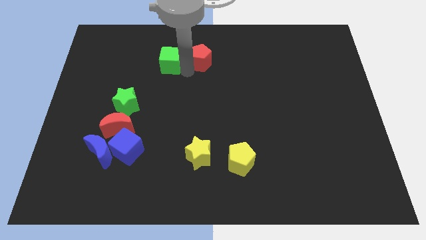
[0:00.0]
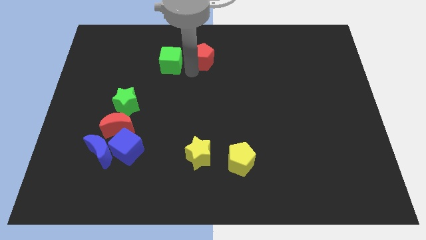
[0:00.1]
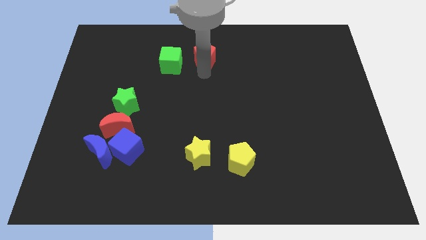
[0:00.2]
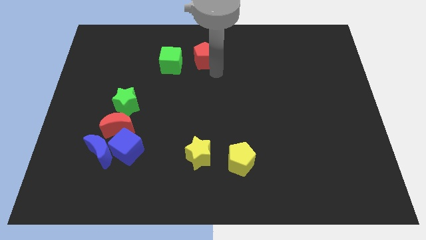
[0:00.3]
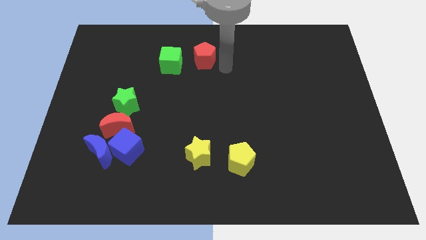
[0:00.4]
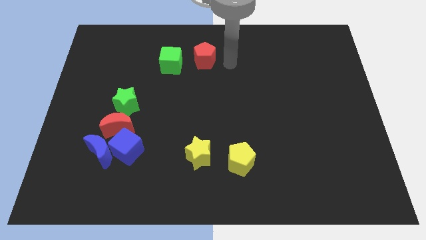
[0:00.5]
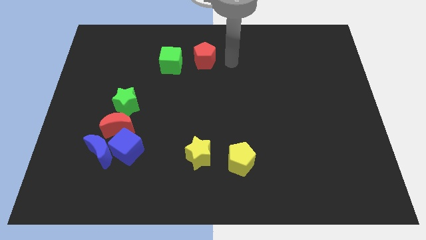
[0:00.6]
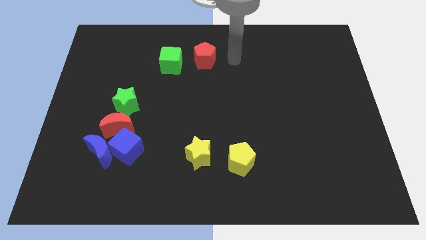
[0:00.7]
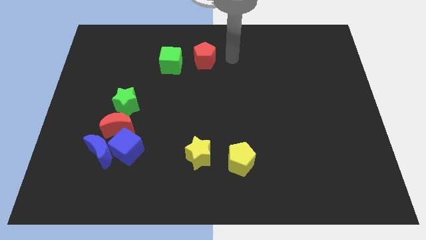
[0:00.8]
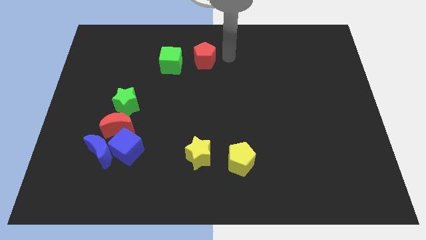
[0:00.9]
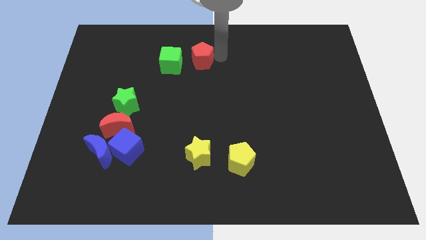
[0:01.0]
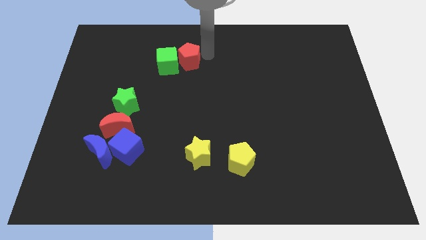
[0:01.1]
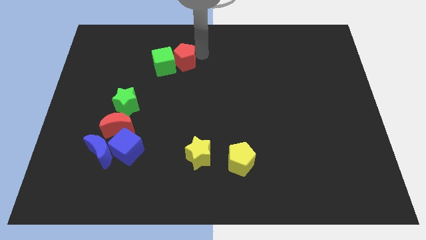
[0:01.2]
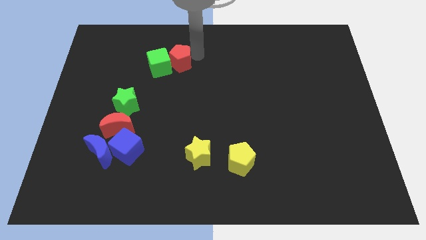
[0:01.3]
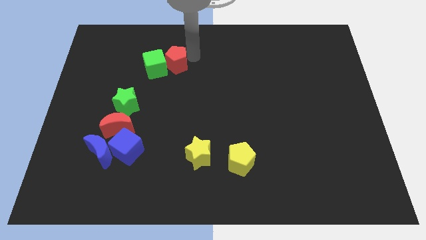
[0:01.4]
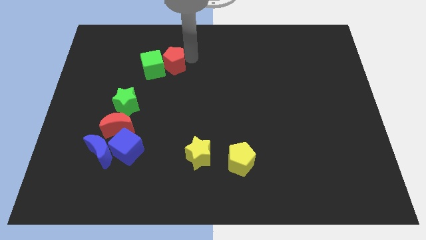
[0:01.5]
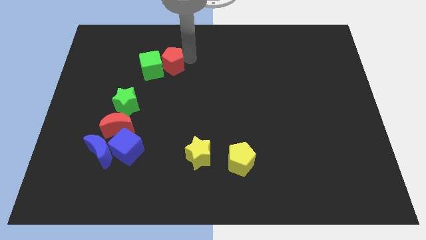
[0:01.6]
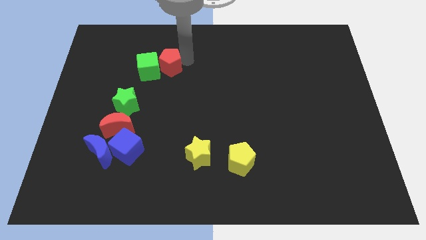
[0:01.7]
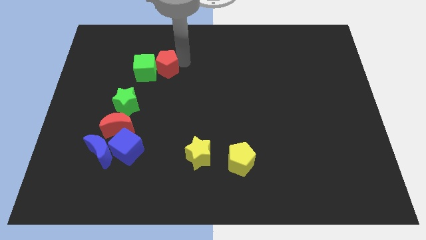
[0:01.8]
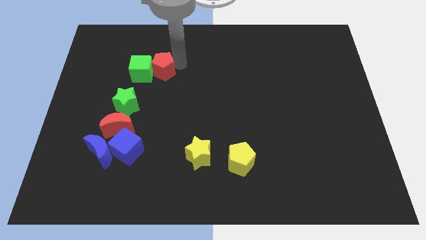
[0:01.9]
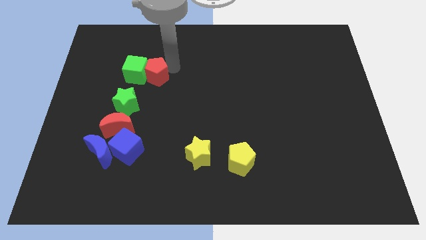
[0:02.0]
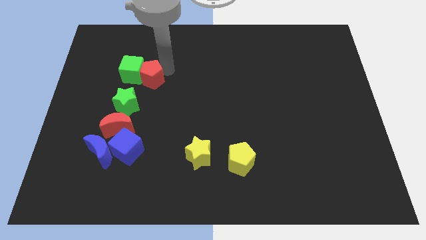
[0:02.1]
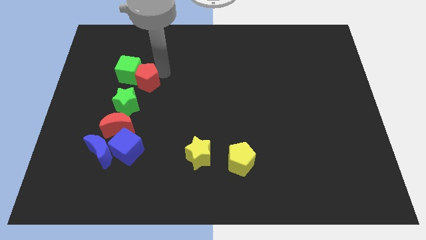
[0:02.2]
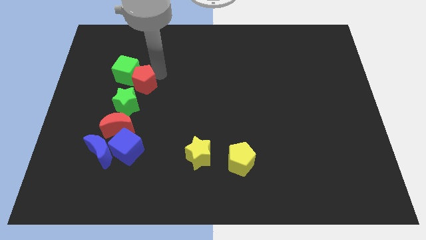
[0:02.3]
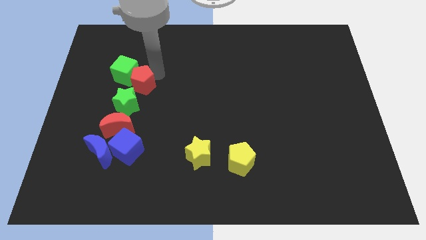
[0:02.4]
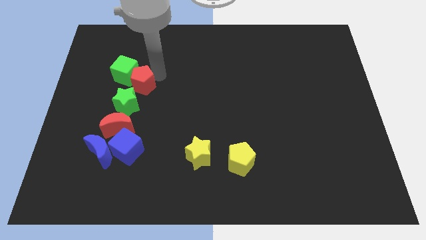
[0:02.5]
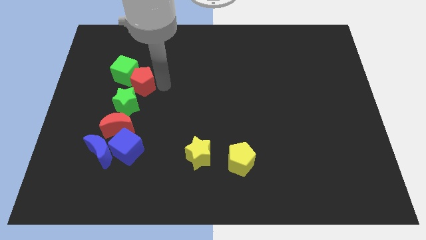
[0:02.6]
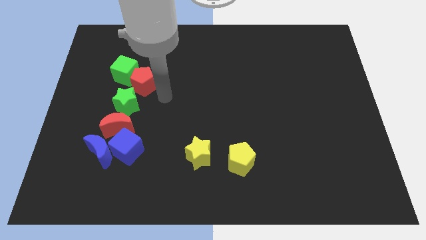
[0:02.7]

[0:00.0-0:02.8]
place the green cube and red pentagon together above the green star

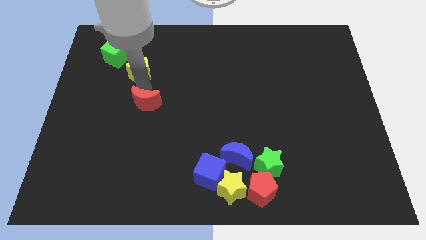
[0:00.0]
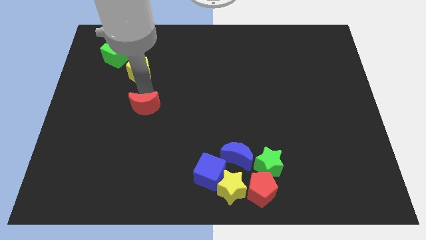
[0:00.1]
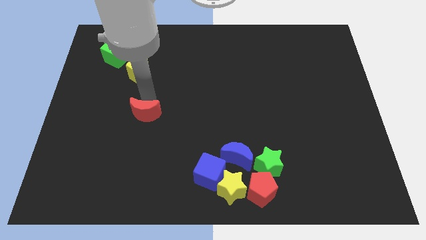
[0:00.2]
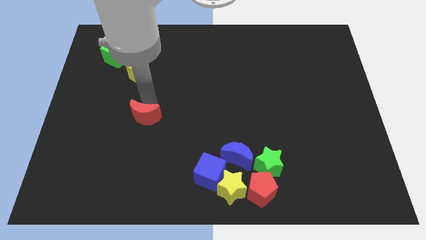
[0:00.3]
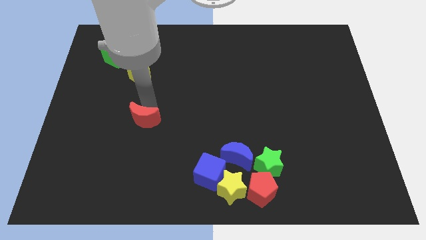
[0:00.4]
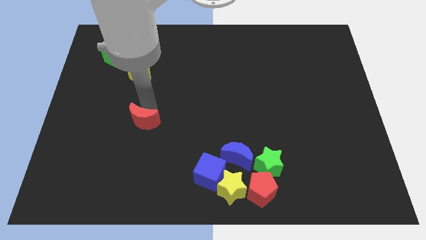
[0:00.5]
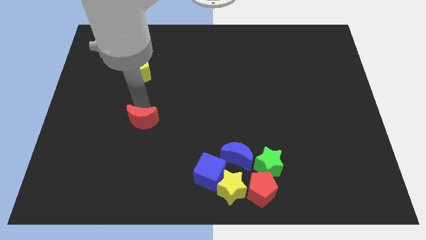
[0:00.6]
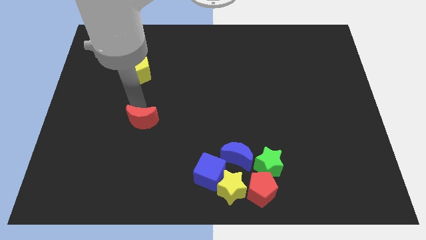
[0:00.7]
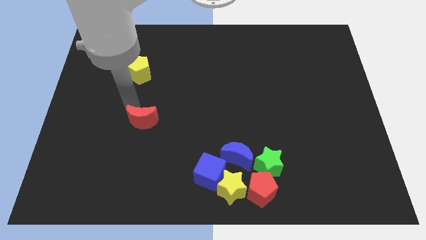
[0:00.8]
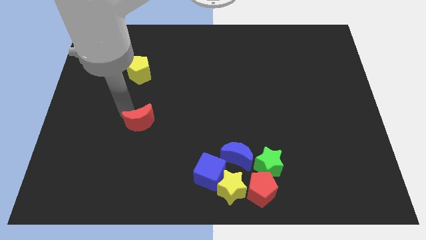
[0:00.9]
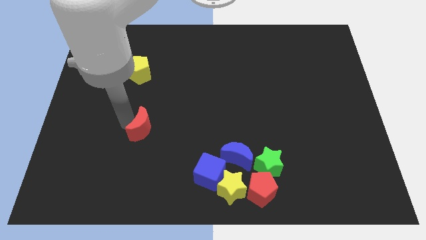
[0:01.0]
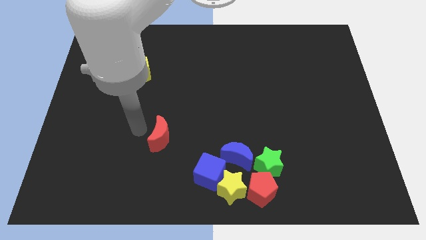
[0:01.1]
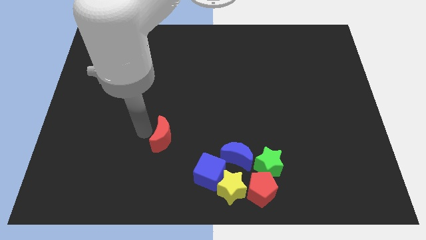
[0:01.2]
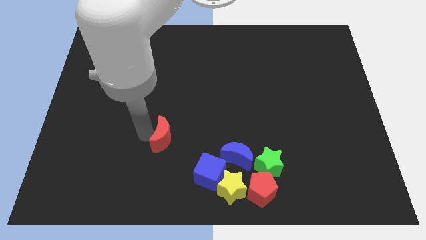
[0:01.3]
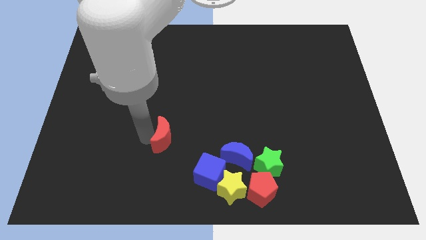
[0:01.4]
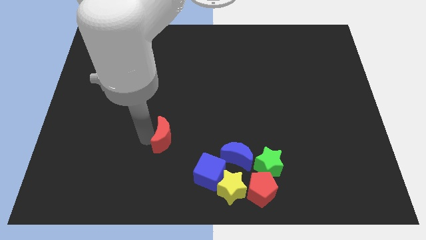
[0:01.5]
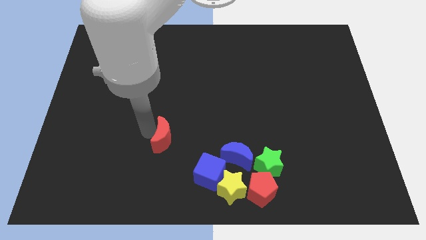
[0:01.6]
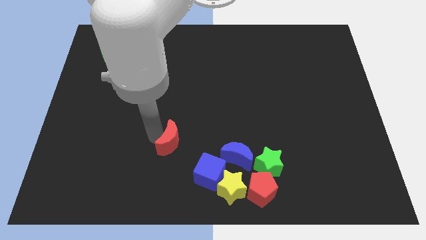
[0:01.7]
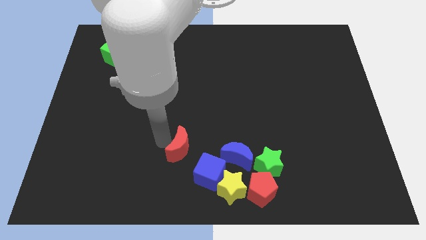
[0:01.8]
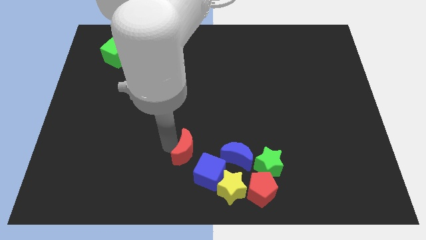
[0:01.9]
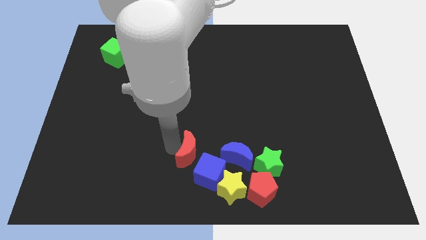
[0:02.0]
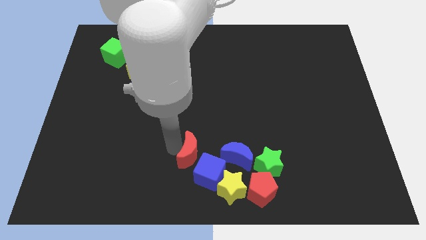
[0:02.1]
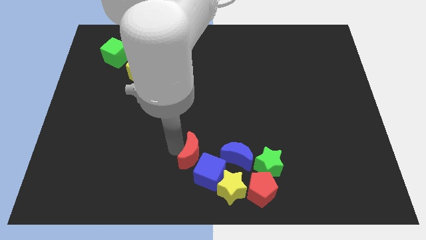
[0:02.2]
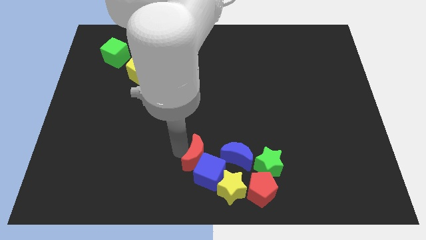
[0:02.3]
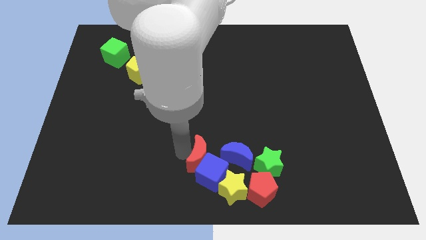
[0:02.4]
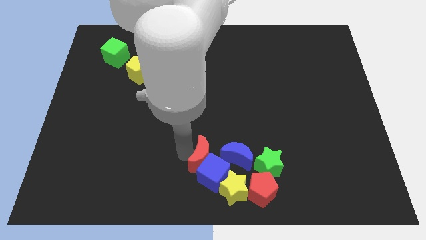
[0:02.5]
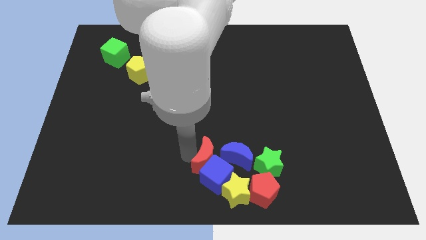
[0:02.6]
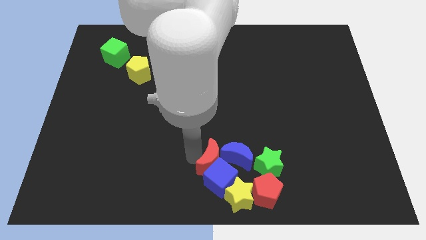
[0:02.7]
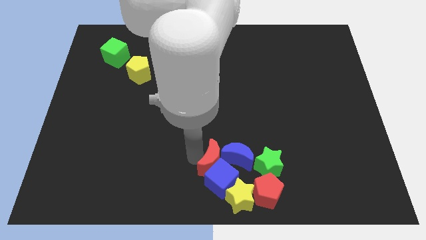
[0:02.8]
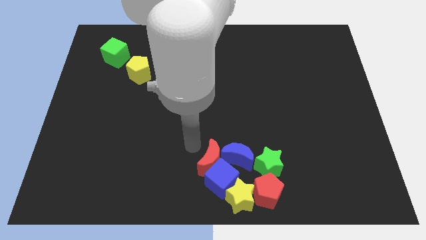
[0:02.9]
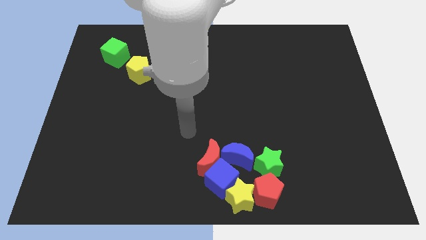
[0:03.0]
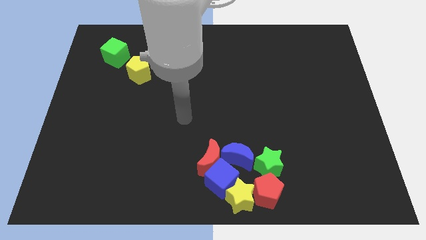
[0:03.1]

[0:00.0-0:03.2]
move the red moon into the blue cube

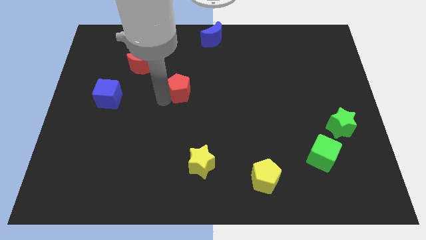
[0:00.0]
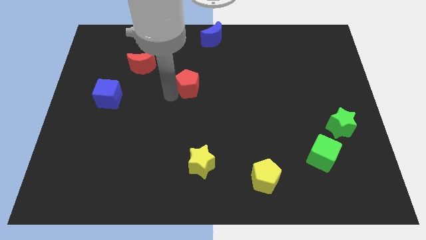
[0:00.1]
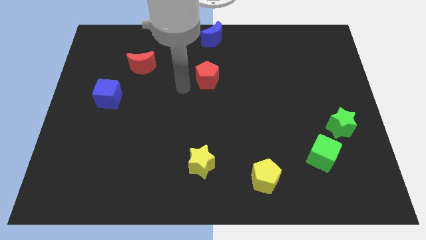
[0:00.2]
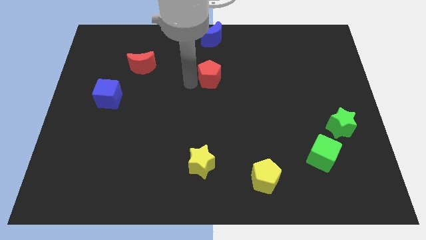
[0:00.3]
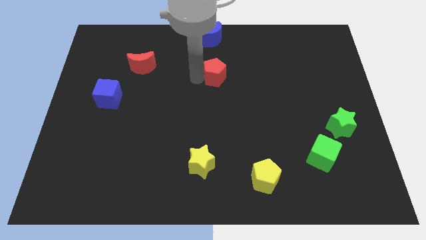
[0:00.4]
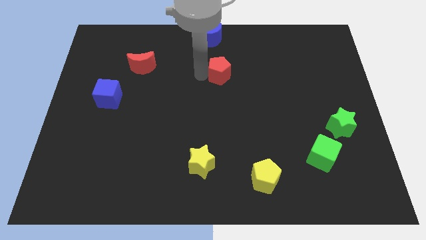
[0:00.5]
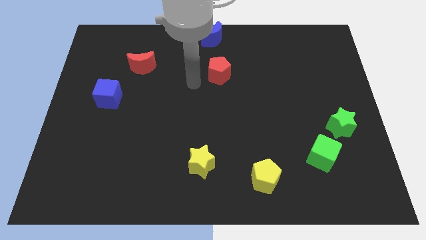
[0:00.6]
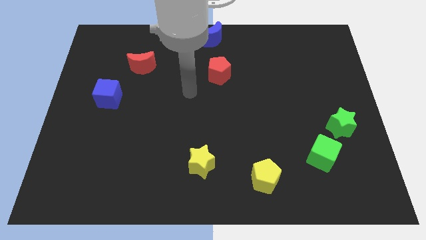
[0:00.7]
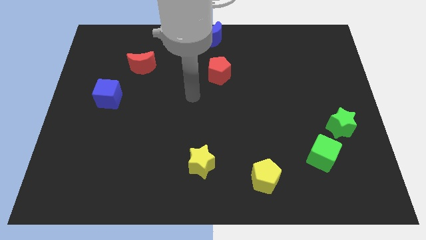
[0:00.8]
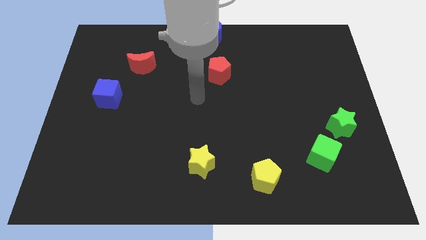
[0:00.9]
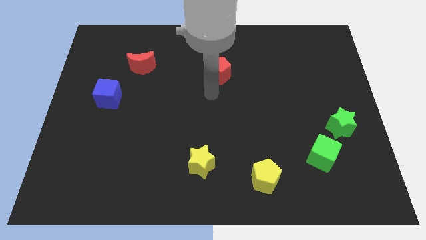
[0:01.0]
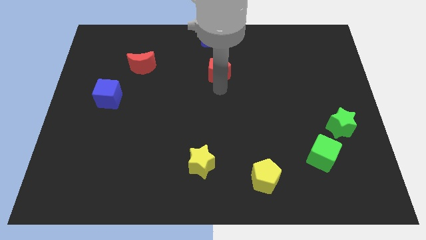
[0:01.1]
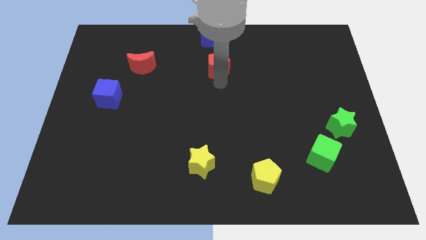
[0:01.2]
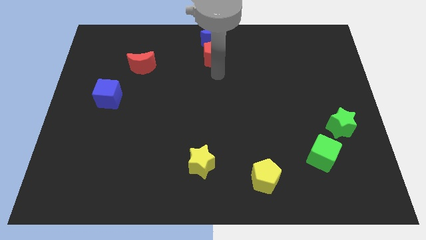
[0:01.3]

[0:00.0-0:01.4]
place the red pentagon right to the red moon

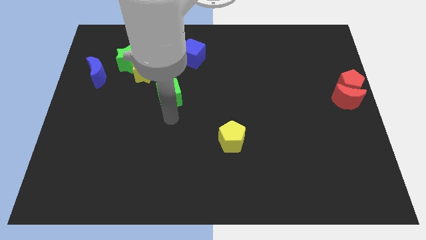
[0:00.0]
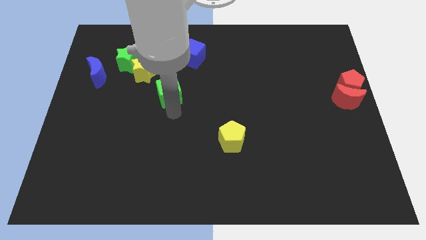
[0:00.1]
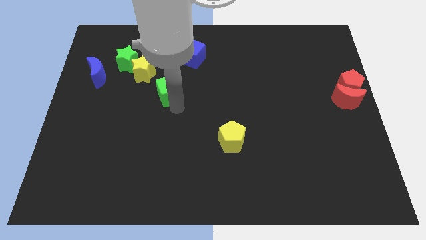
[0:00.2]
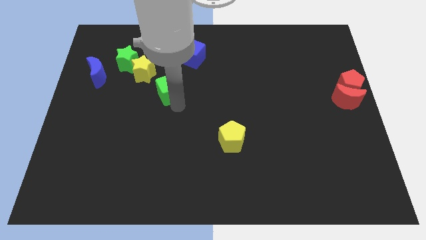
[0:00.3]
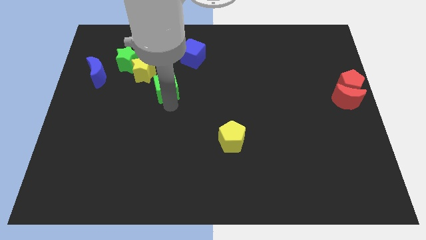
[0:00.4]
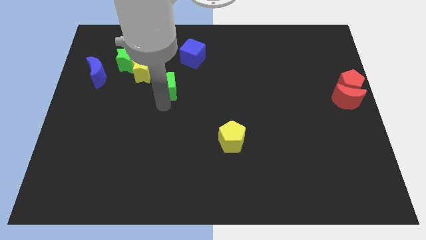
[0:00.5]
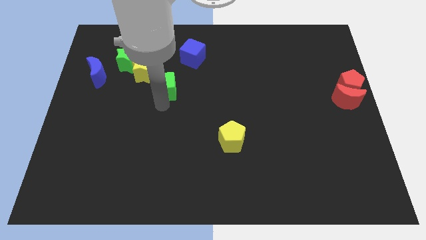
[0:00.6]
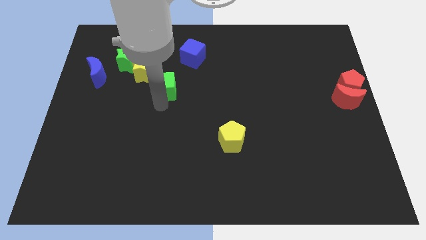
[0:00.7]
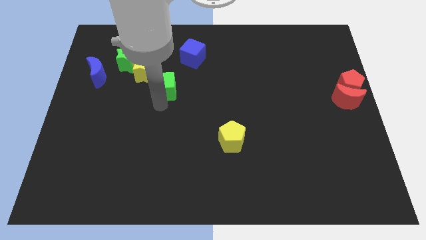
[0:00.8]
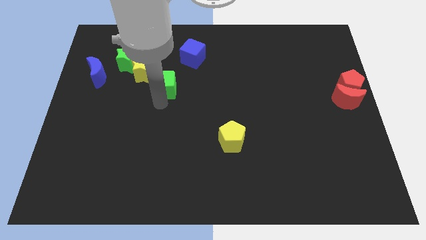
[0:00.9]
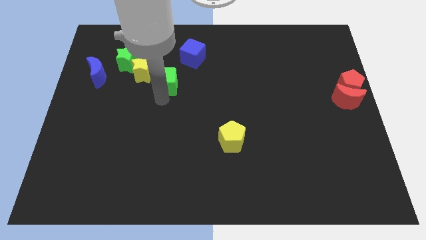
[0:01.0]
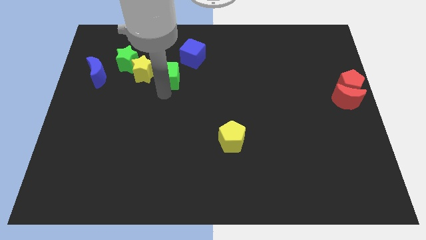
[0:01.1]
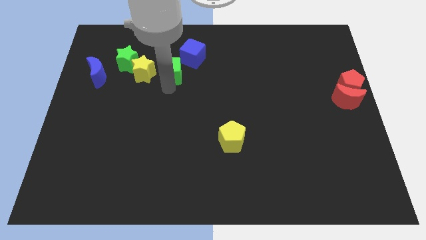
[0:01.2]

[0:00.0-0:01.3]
place the green cube to the right of the yellow star

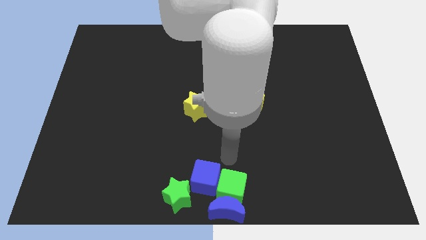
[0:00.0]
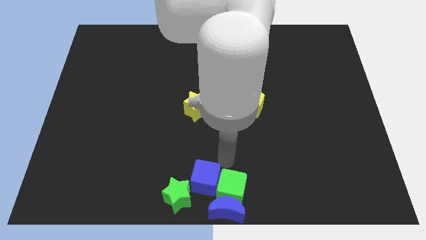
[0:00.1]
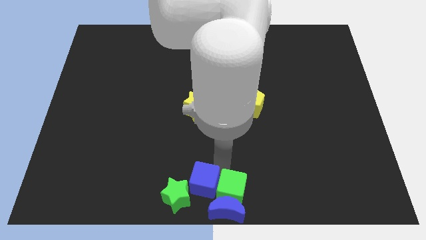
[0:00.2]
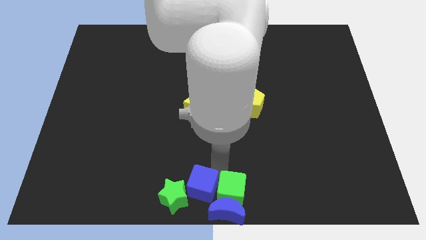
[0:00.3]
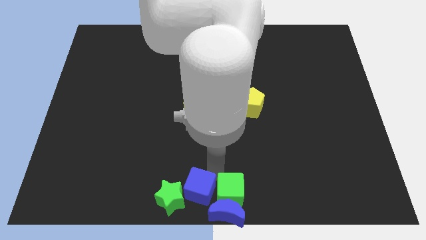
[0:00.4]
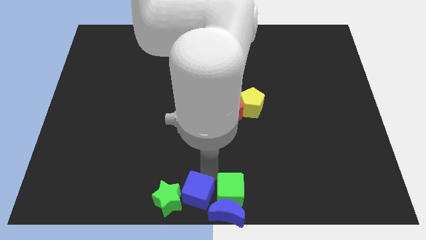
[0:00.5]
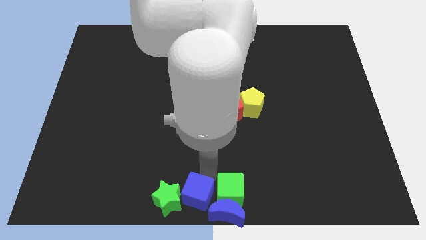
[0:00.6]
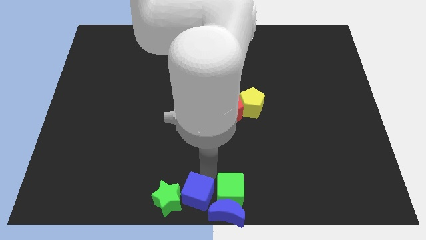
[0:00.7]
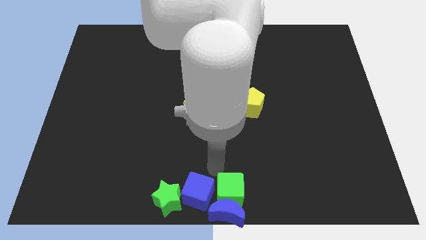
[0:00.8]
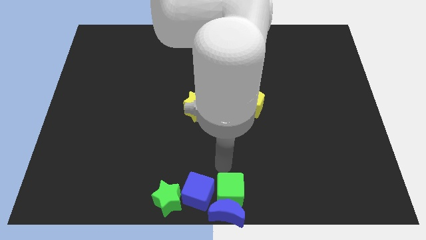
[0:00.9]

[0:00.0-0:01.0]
move the blue cube to the right of the green star
